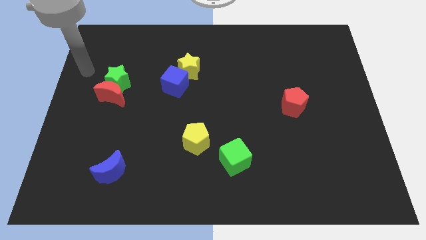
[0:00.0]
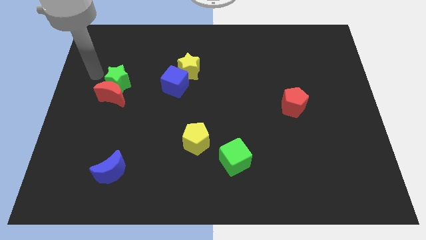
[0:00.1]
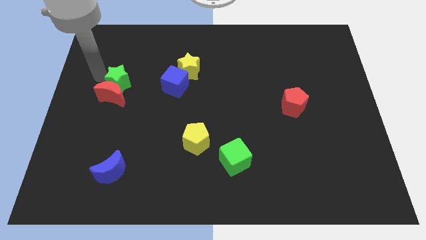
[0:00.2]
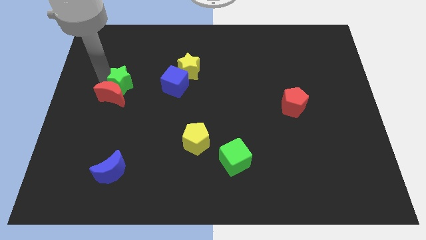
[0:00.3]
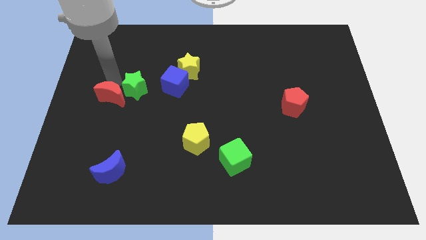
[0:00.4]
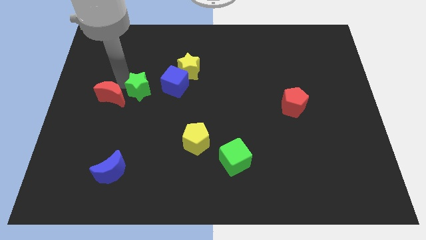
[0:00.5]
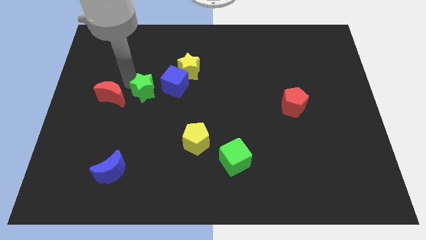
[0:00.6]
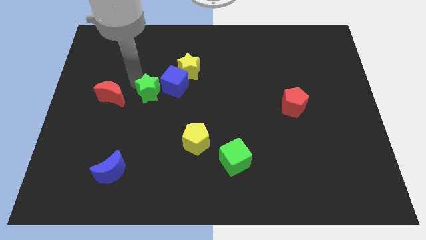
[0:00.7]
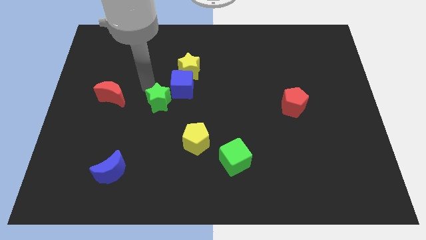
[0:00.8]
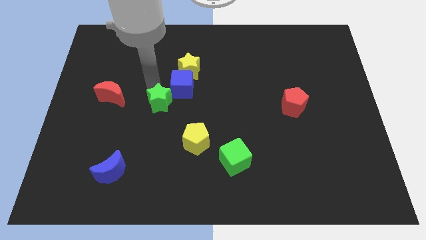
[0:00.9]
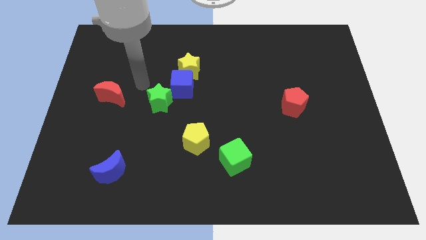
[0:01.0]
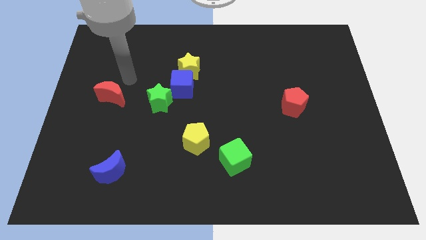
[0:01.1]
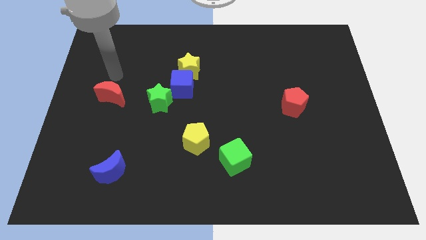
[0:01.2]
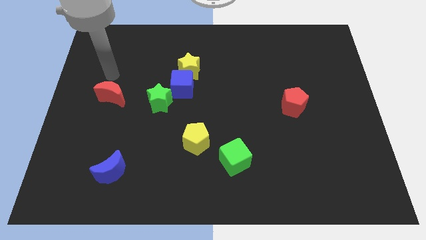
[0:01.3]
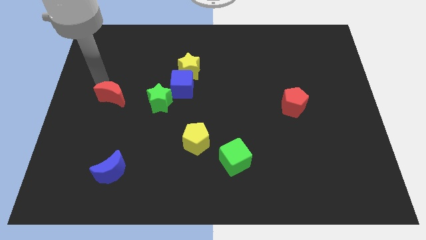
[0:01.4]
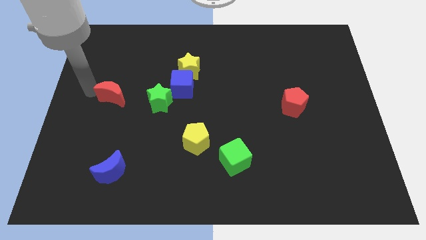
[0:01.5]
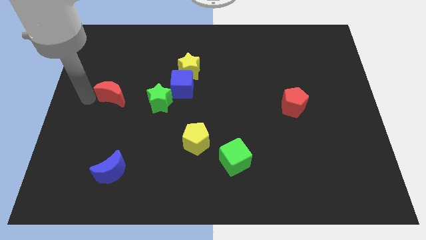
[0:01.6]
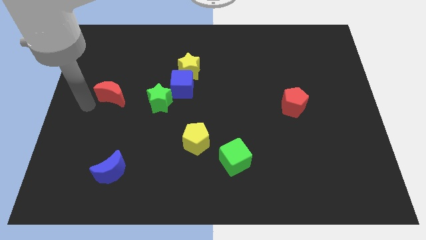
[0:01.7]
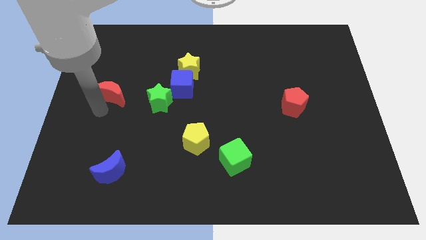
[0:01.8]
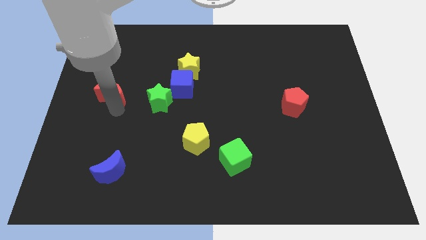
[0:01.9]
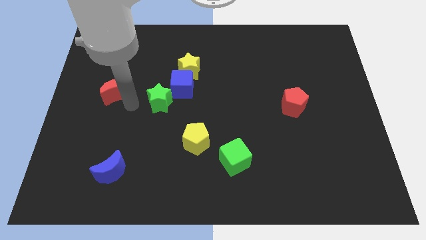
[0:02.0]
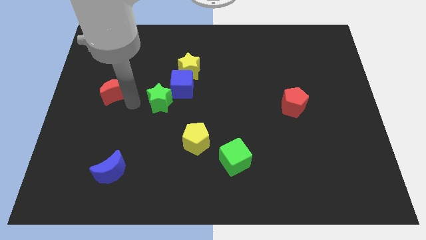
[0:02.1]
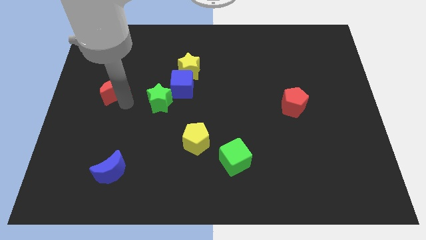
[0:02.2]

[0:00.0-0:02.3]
separate the red moon and green star

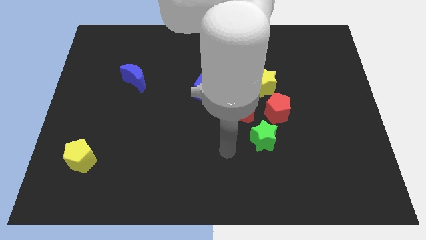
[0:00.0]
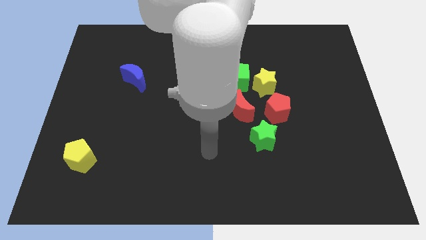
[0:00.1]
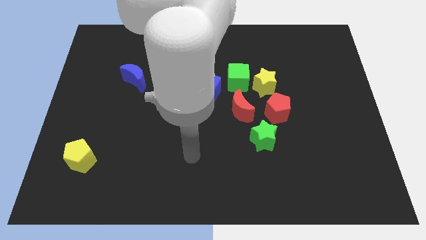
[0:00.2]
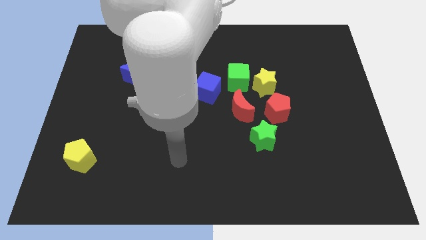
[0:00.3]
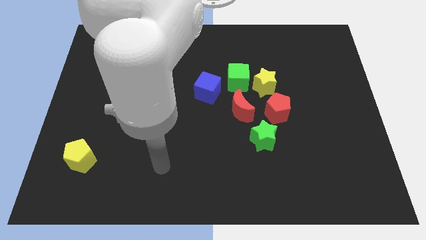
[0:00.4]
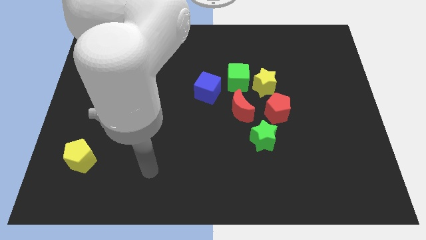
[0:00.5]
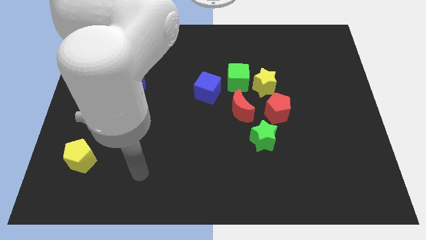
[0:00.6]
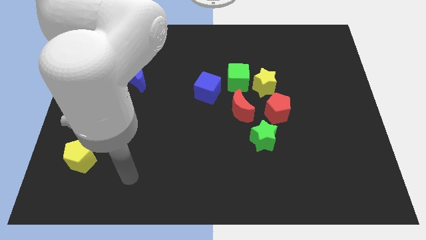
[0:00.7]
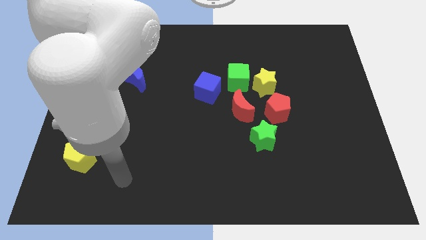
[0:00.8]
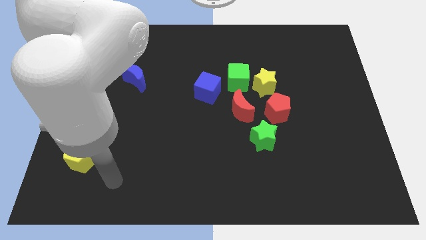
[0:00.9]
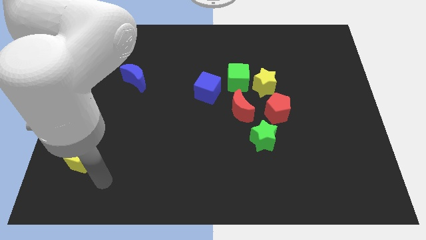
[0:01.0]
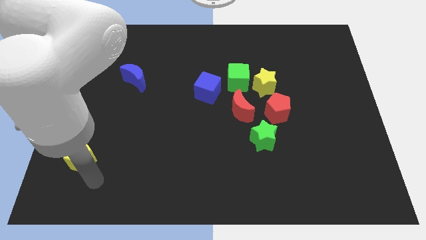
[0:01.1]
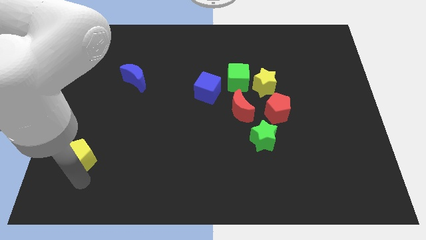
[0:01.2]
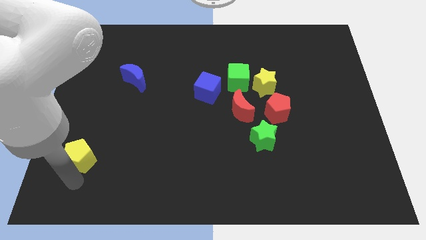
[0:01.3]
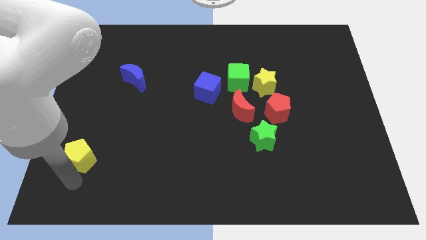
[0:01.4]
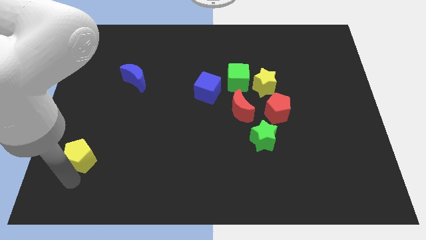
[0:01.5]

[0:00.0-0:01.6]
move your arm to the bottom of the yellow pentagon

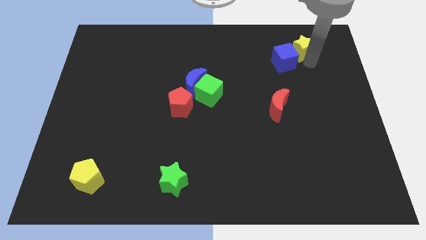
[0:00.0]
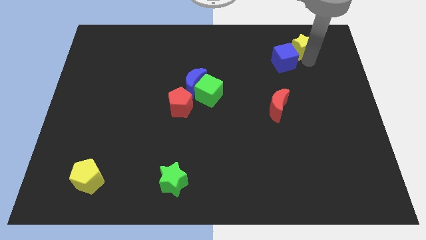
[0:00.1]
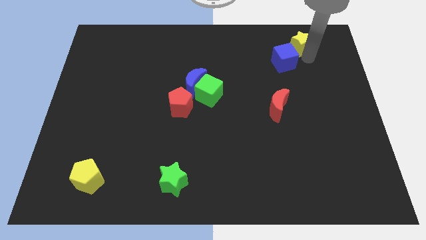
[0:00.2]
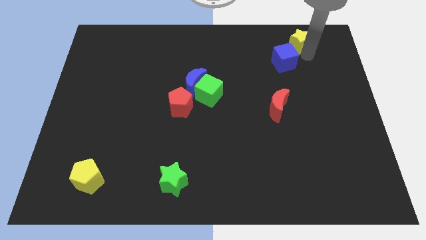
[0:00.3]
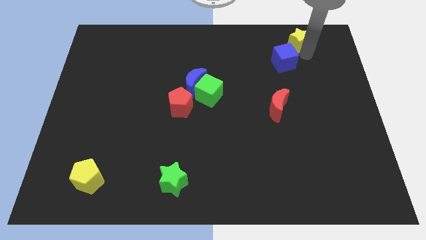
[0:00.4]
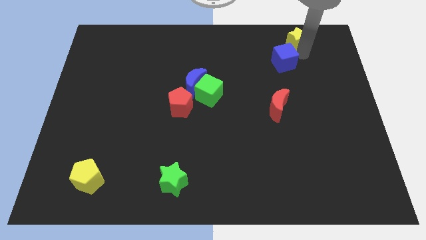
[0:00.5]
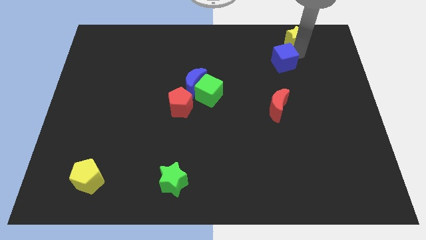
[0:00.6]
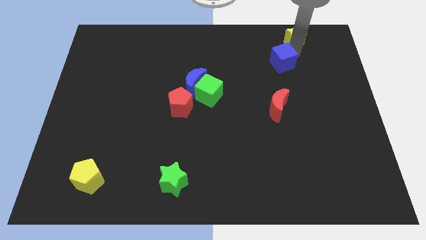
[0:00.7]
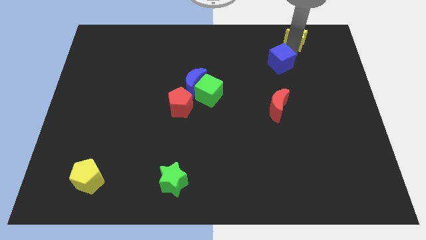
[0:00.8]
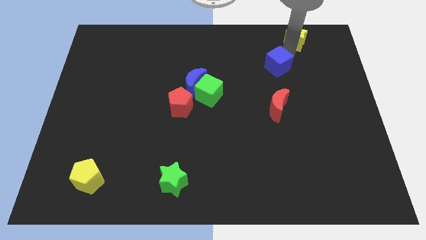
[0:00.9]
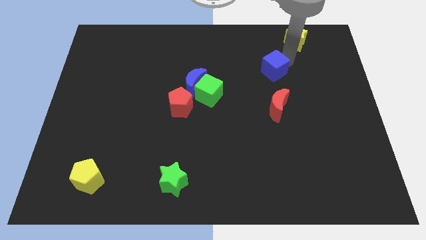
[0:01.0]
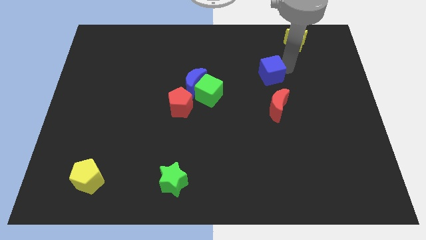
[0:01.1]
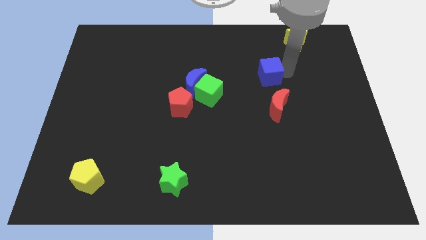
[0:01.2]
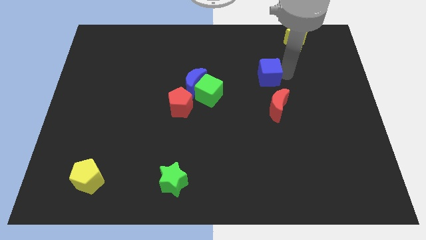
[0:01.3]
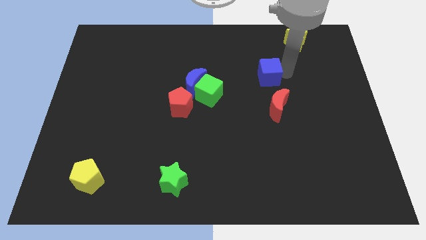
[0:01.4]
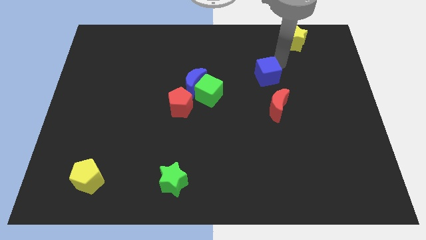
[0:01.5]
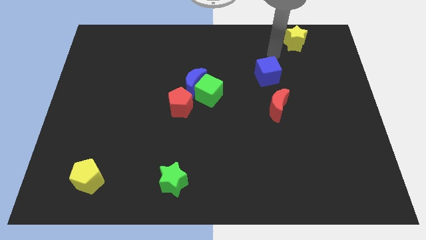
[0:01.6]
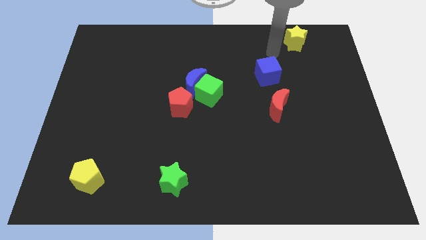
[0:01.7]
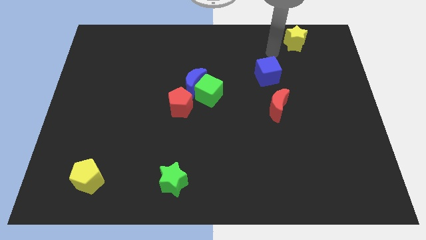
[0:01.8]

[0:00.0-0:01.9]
move the blue cube slightly to the left

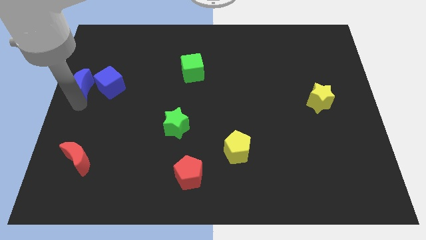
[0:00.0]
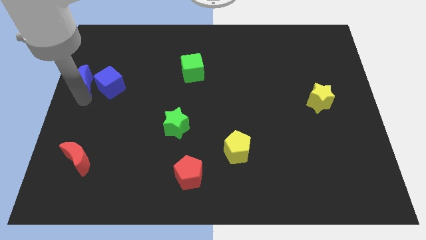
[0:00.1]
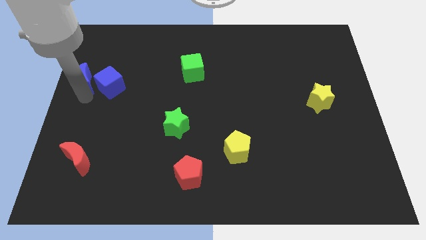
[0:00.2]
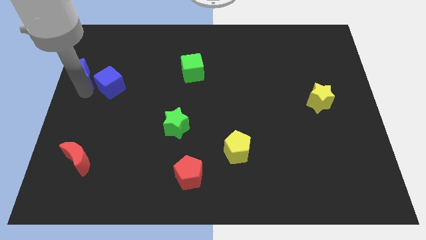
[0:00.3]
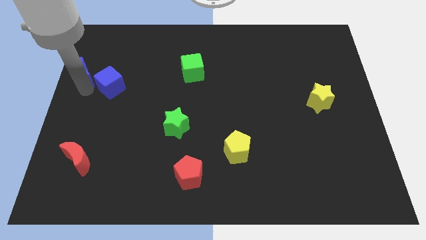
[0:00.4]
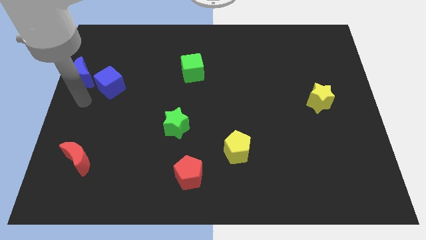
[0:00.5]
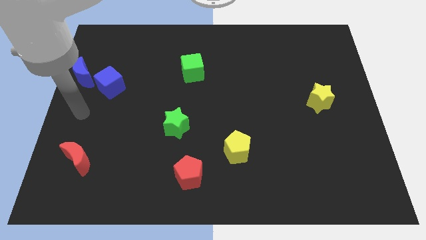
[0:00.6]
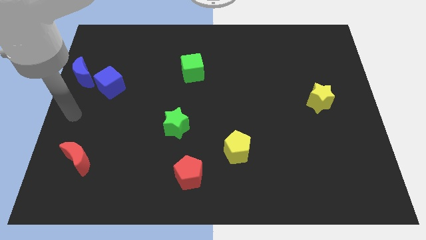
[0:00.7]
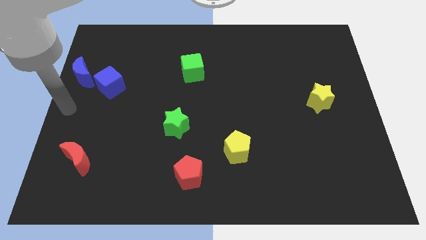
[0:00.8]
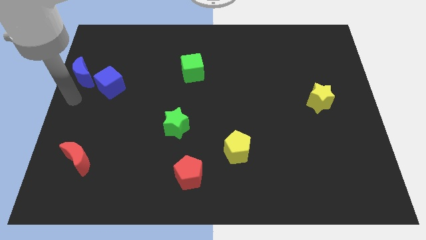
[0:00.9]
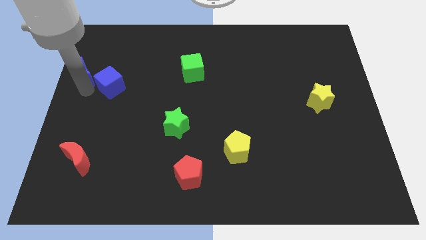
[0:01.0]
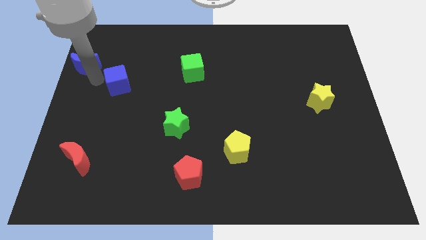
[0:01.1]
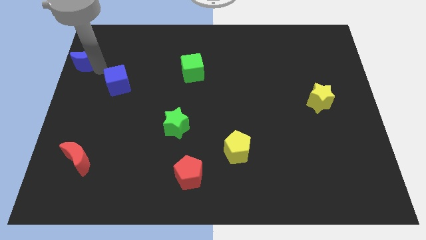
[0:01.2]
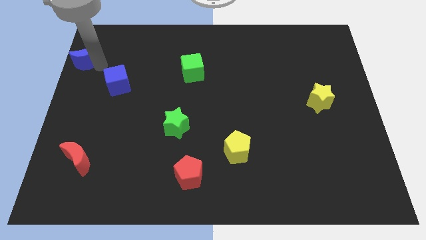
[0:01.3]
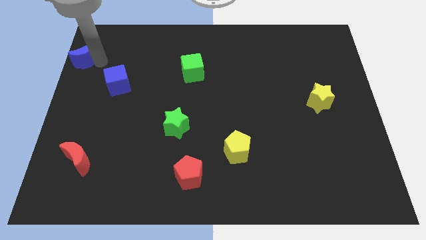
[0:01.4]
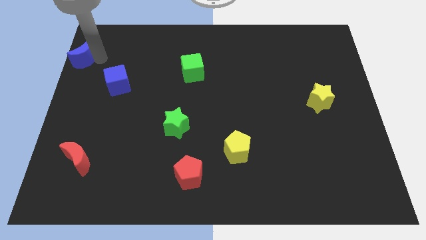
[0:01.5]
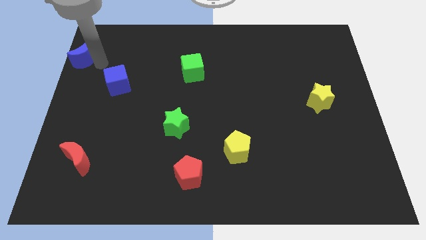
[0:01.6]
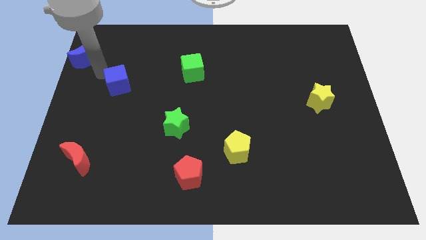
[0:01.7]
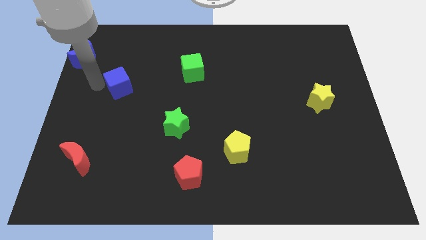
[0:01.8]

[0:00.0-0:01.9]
separate blue moon and blue cube

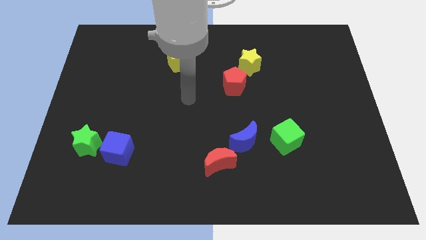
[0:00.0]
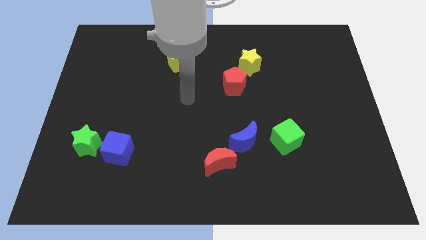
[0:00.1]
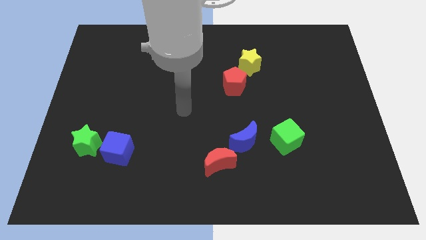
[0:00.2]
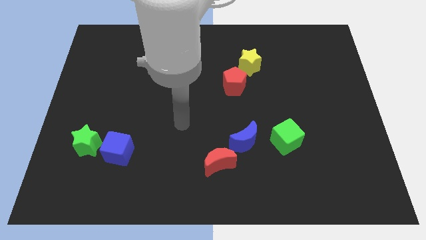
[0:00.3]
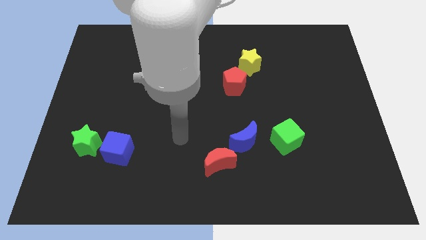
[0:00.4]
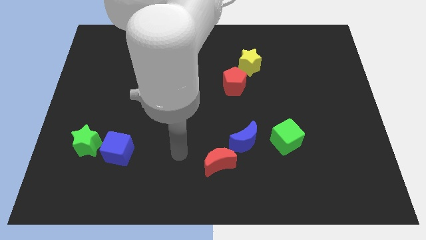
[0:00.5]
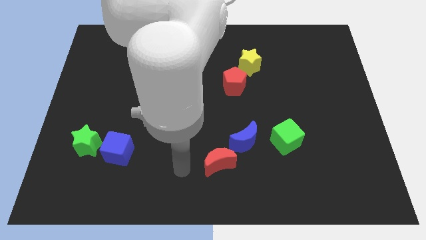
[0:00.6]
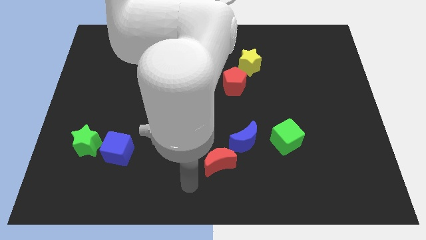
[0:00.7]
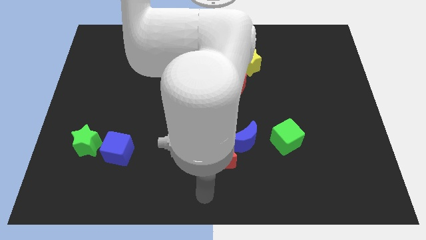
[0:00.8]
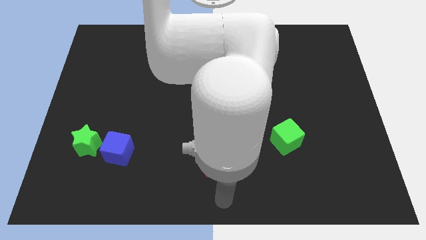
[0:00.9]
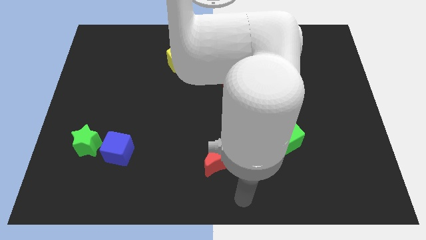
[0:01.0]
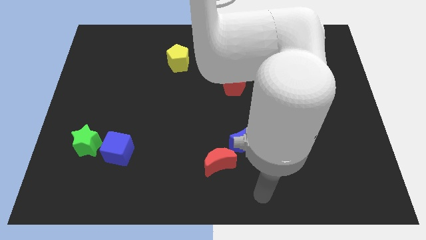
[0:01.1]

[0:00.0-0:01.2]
point the arm below the blue moon
